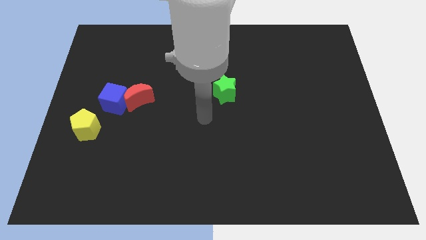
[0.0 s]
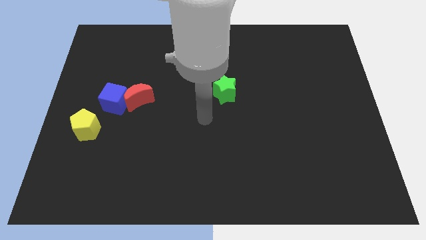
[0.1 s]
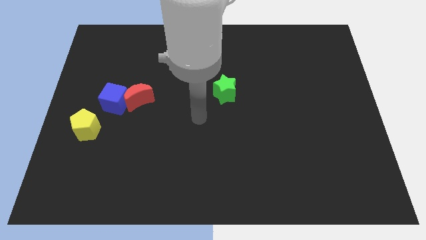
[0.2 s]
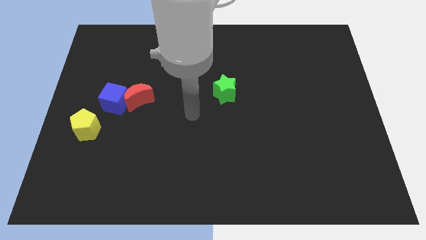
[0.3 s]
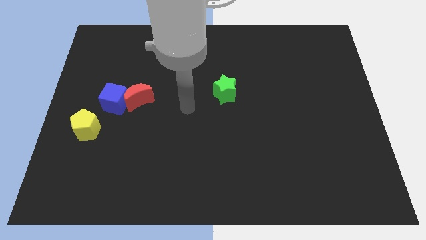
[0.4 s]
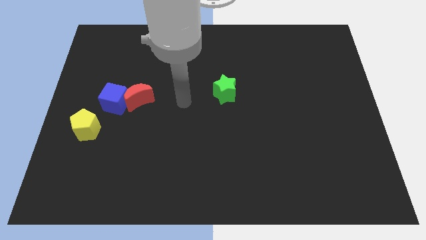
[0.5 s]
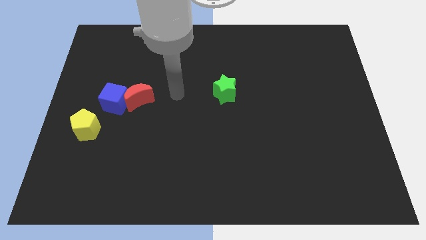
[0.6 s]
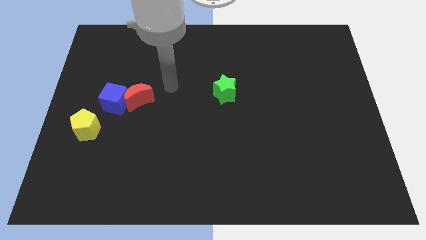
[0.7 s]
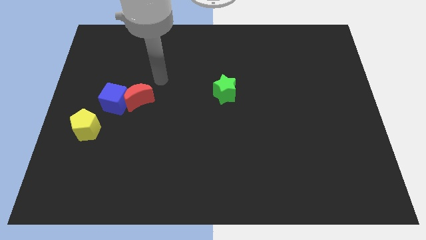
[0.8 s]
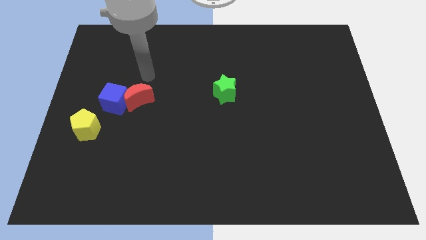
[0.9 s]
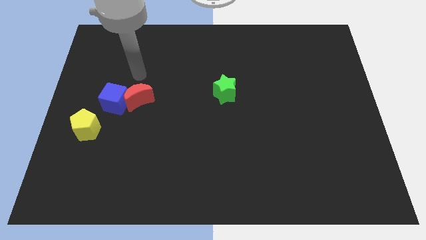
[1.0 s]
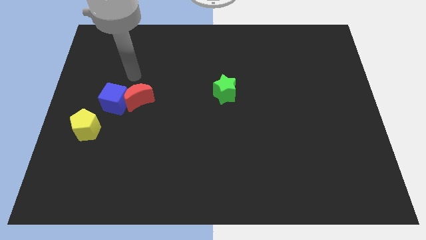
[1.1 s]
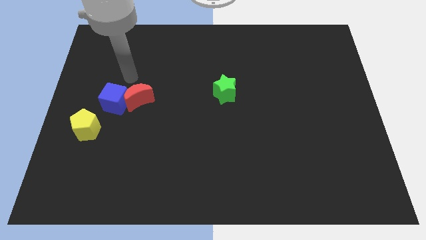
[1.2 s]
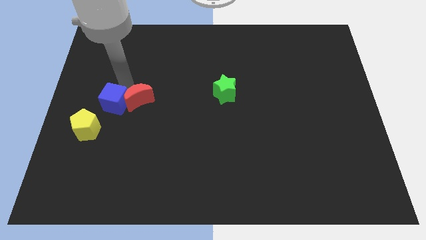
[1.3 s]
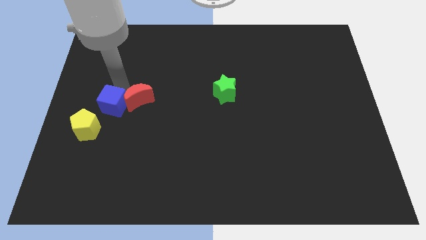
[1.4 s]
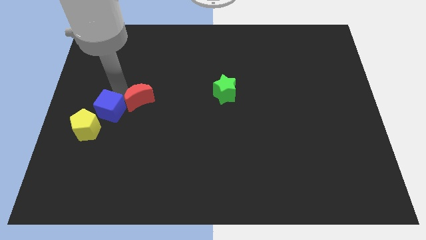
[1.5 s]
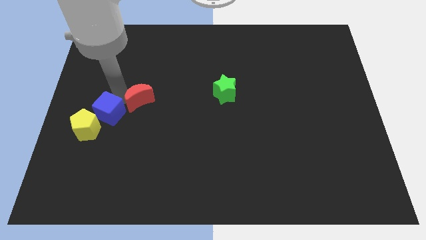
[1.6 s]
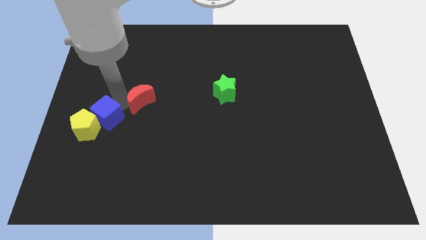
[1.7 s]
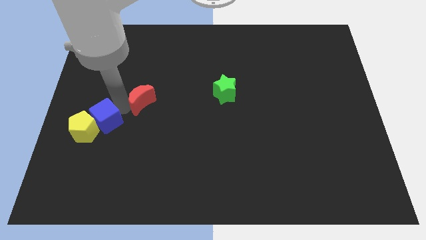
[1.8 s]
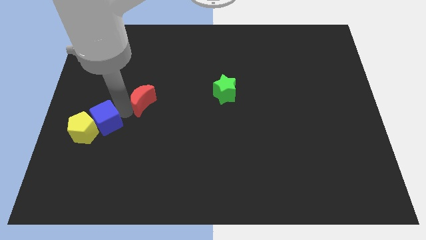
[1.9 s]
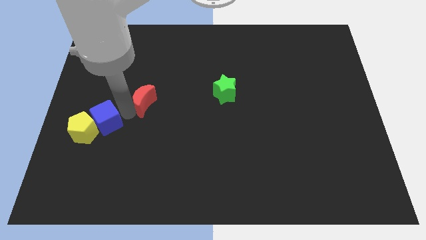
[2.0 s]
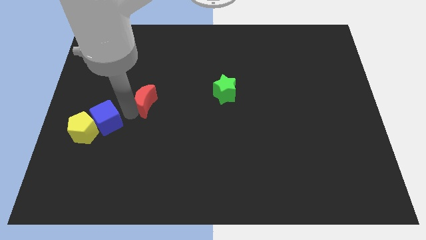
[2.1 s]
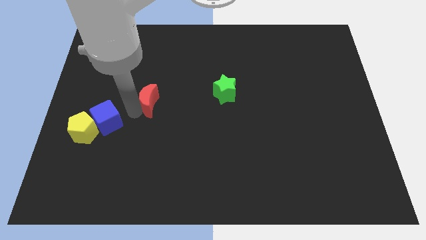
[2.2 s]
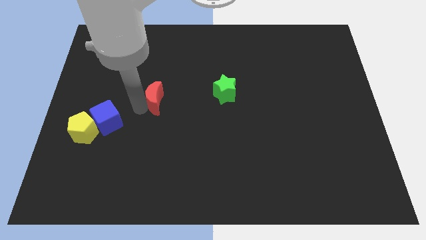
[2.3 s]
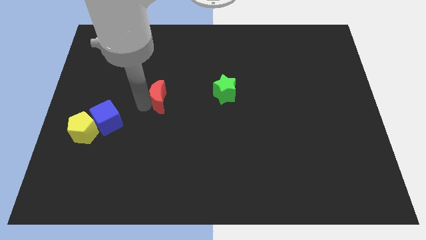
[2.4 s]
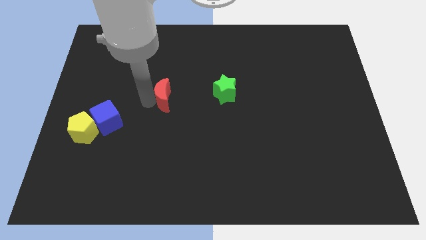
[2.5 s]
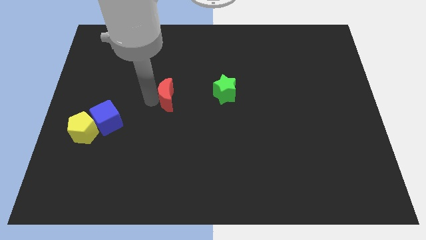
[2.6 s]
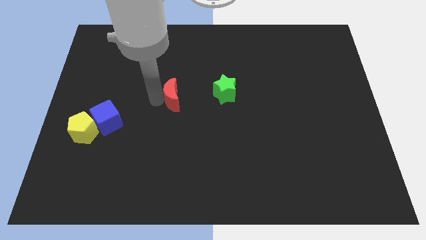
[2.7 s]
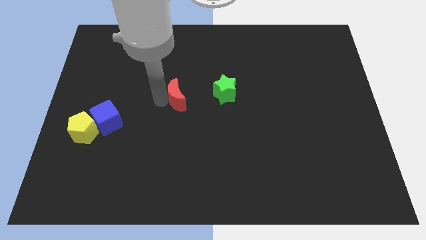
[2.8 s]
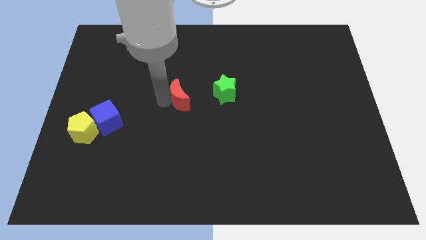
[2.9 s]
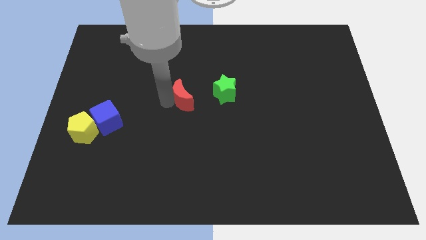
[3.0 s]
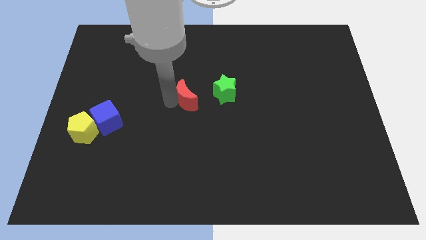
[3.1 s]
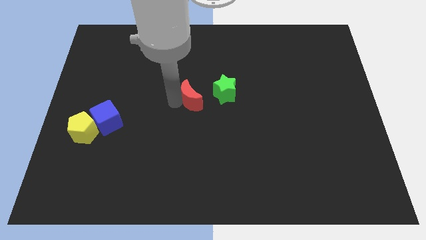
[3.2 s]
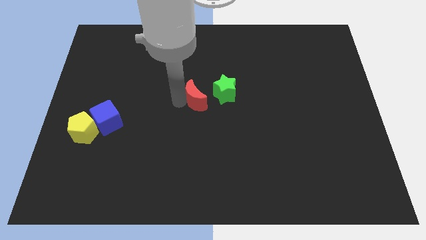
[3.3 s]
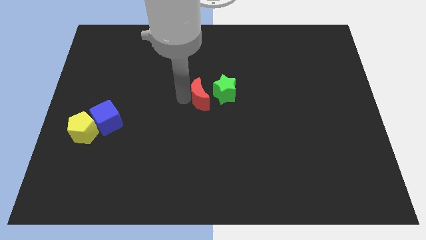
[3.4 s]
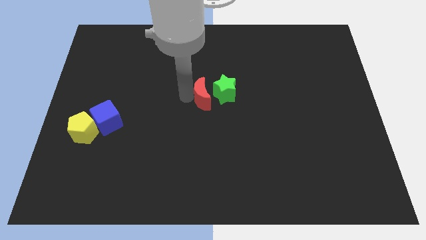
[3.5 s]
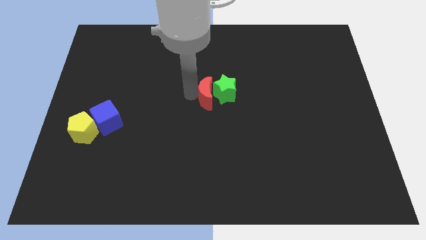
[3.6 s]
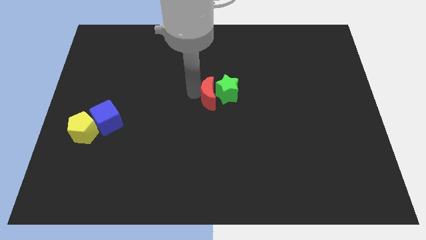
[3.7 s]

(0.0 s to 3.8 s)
push the moon towards the star

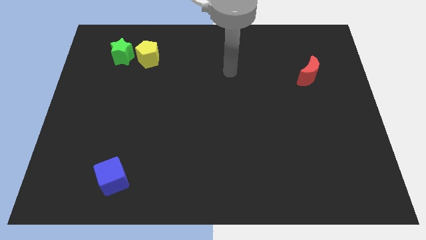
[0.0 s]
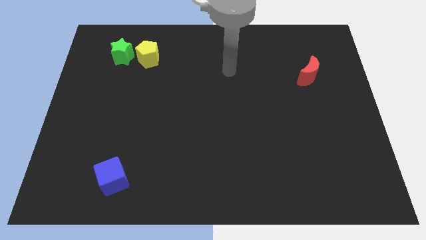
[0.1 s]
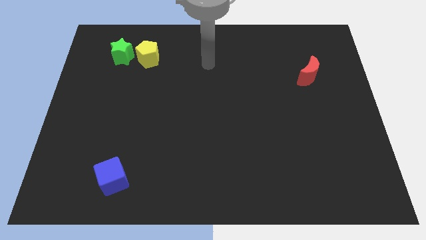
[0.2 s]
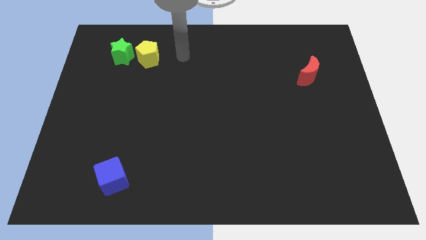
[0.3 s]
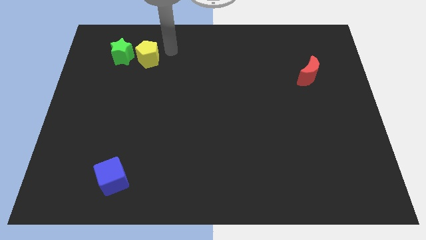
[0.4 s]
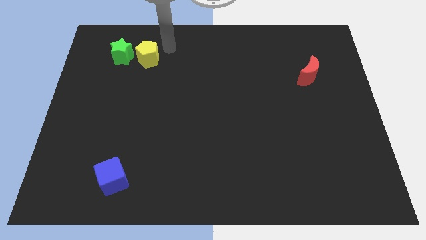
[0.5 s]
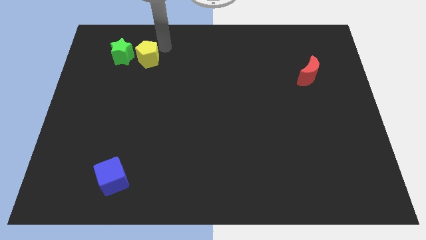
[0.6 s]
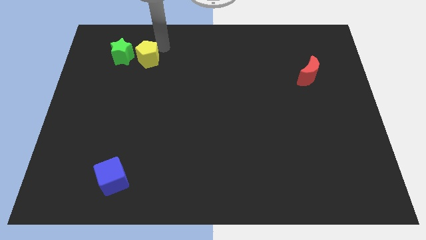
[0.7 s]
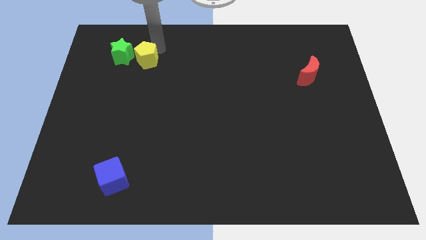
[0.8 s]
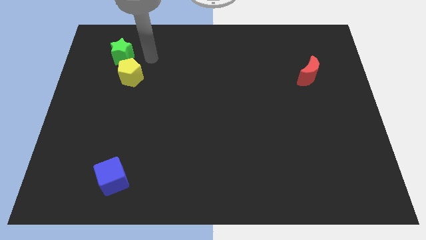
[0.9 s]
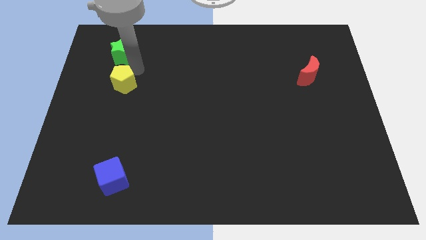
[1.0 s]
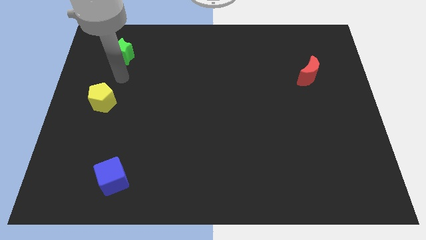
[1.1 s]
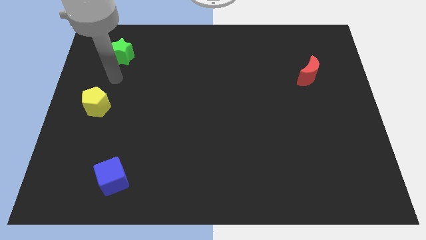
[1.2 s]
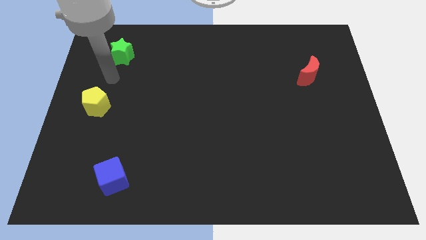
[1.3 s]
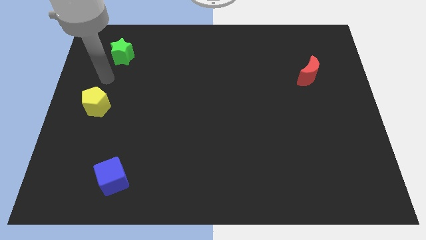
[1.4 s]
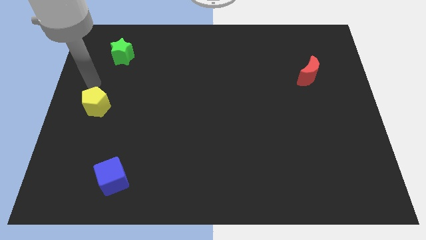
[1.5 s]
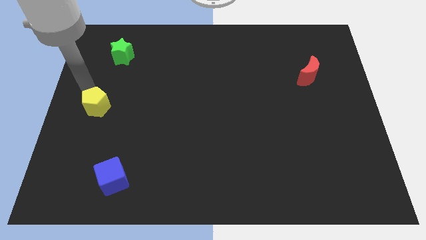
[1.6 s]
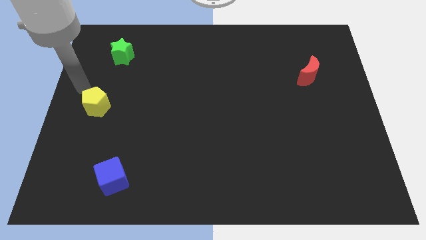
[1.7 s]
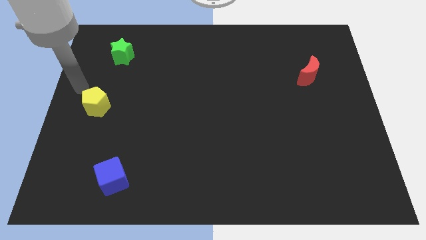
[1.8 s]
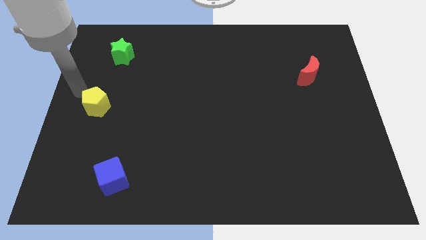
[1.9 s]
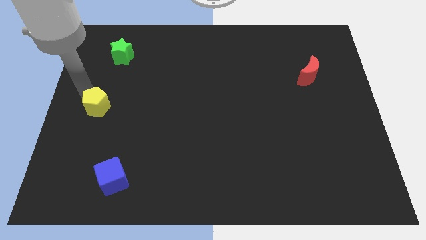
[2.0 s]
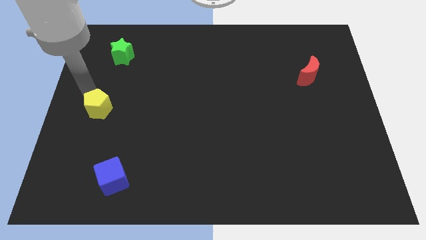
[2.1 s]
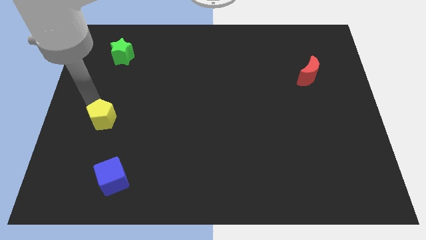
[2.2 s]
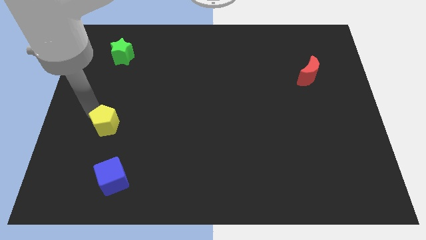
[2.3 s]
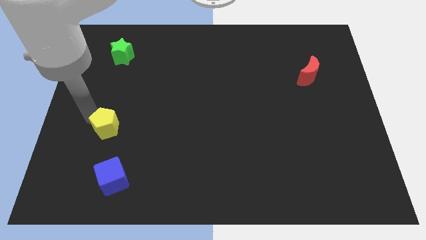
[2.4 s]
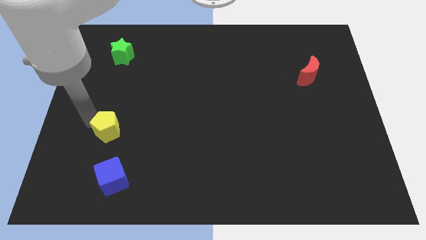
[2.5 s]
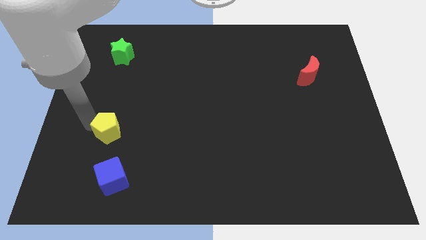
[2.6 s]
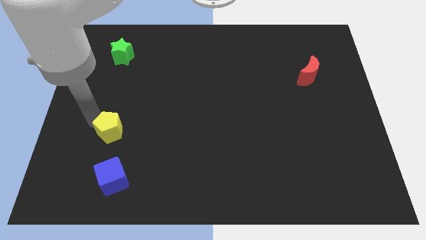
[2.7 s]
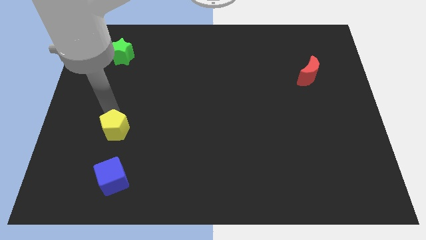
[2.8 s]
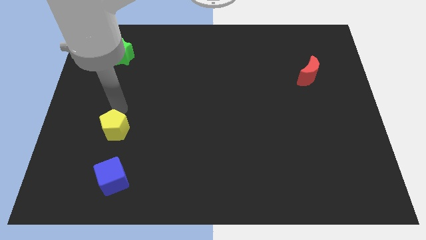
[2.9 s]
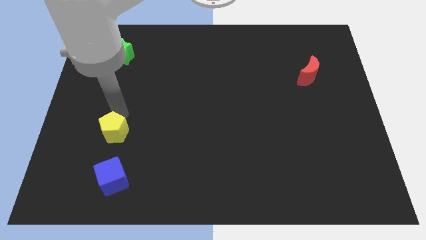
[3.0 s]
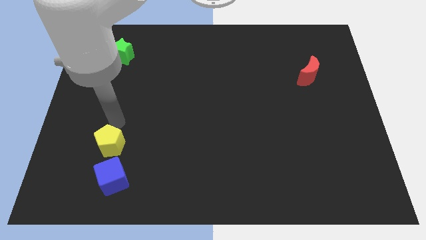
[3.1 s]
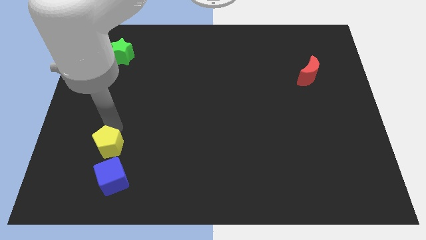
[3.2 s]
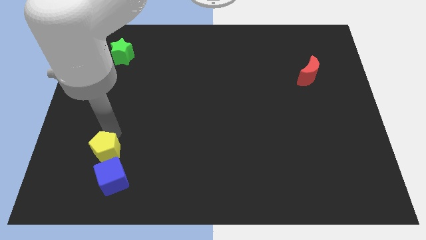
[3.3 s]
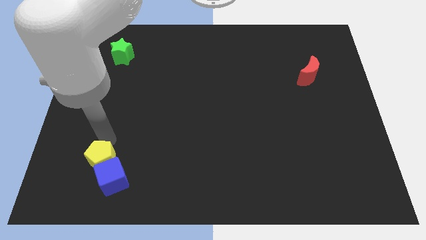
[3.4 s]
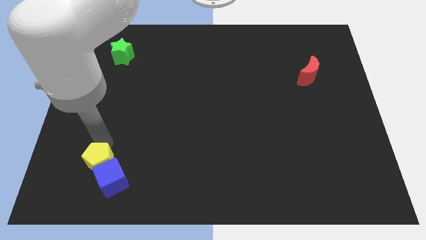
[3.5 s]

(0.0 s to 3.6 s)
put the pentagon next to the blue block

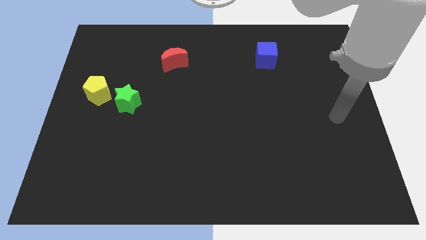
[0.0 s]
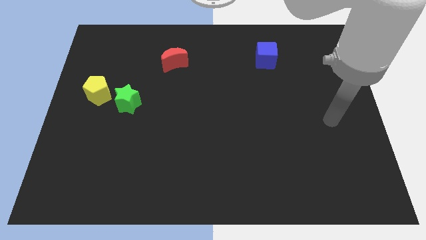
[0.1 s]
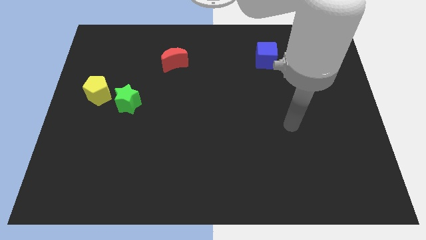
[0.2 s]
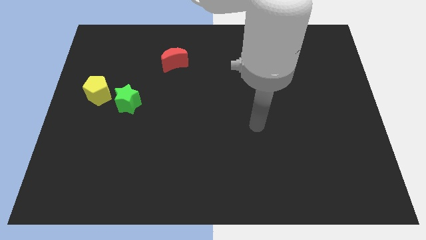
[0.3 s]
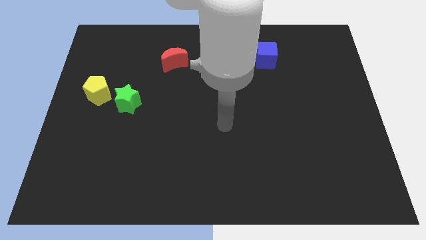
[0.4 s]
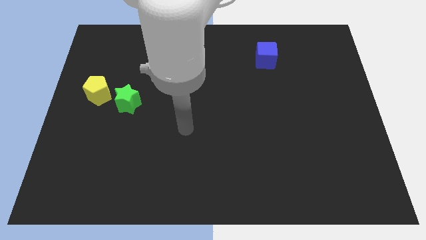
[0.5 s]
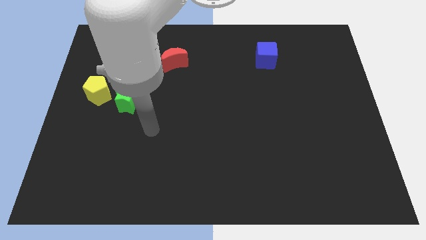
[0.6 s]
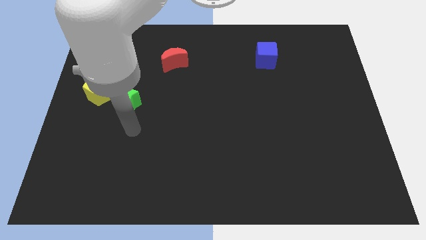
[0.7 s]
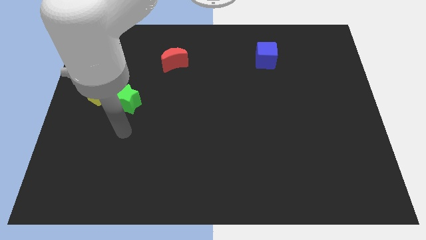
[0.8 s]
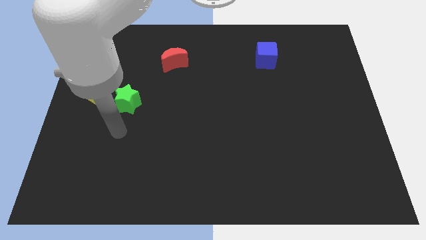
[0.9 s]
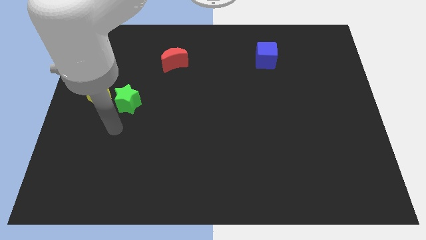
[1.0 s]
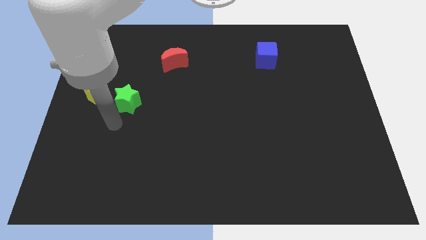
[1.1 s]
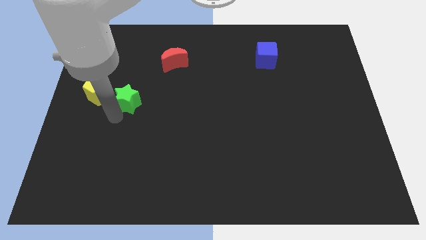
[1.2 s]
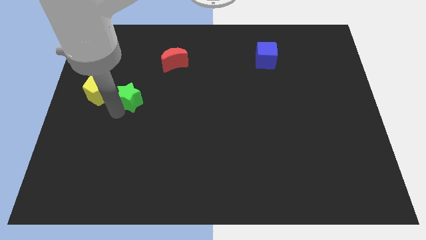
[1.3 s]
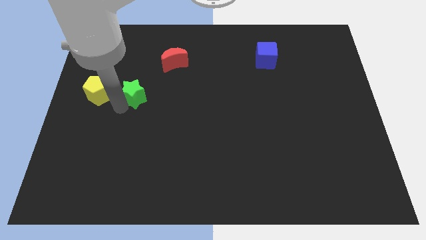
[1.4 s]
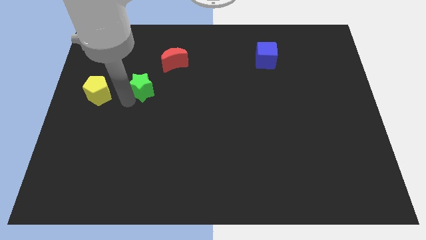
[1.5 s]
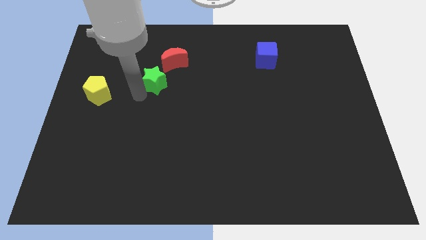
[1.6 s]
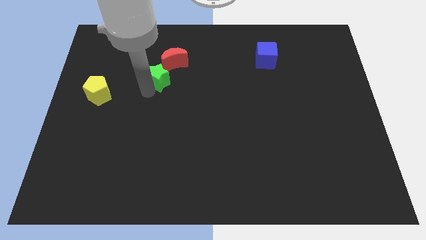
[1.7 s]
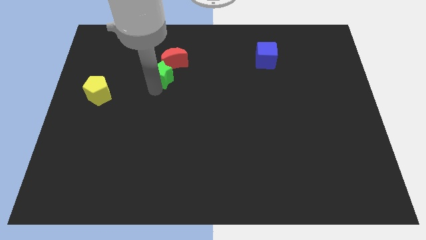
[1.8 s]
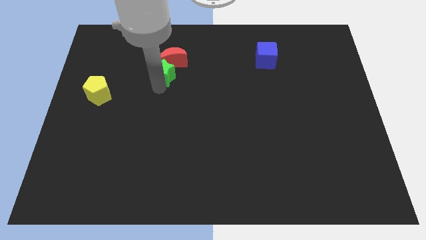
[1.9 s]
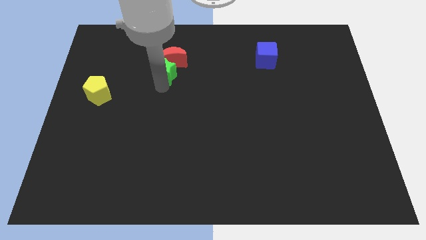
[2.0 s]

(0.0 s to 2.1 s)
push the star close to the moon
